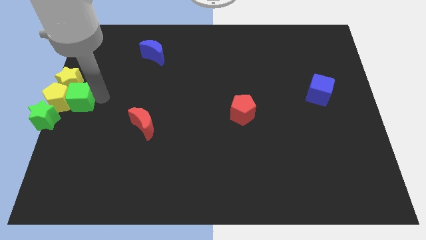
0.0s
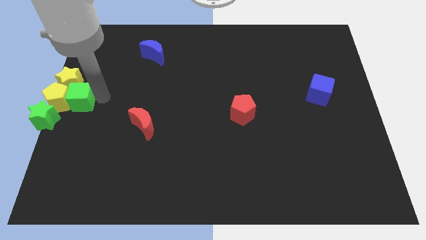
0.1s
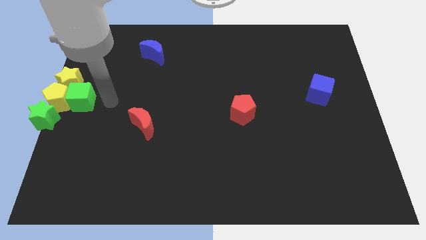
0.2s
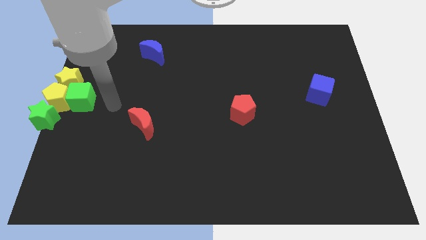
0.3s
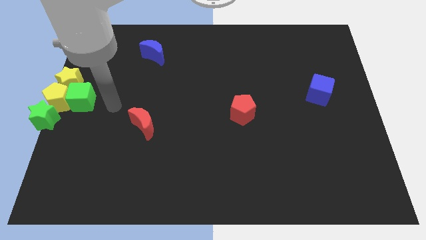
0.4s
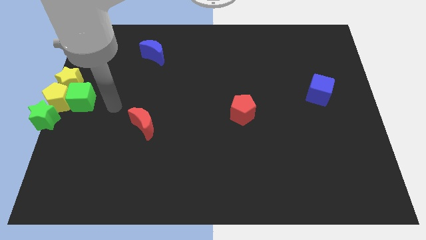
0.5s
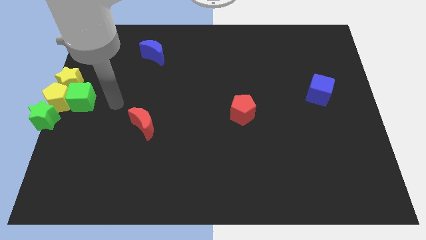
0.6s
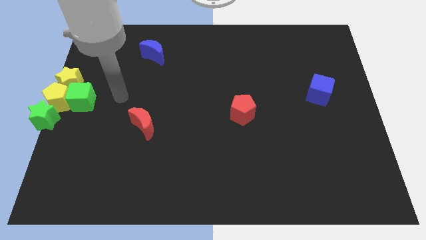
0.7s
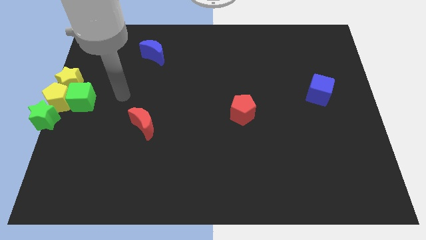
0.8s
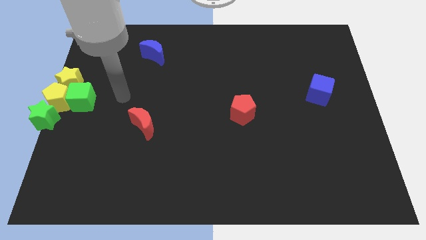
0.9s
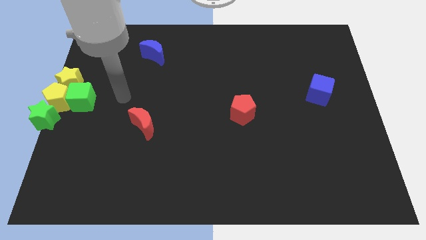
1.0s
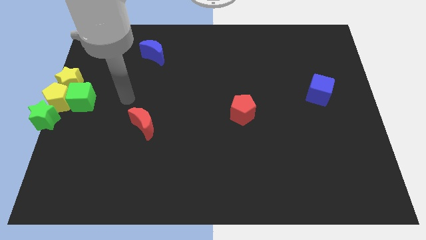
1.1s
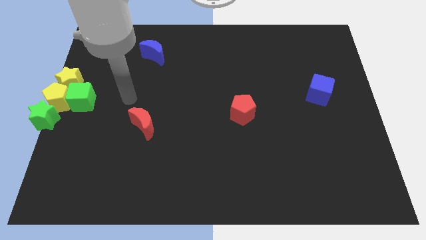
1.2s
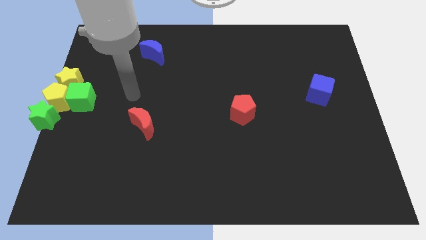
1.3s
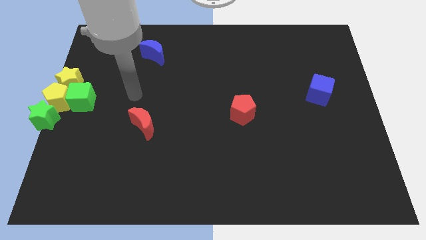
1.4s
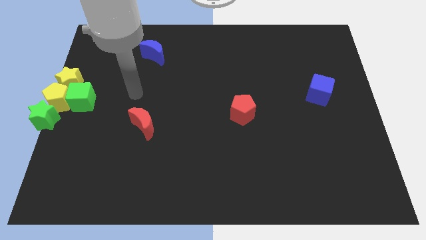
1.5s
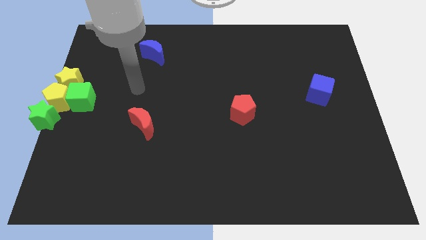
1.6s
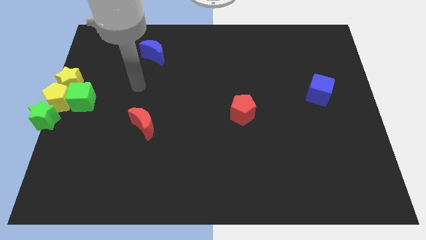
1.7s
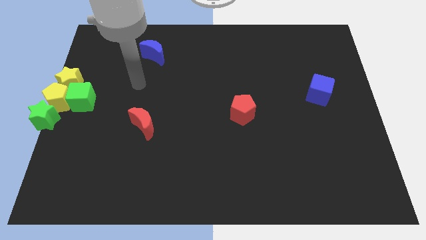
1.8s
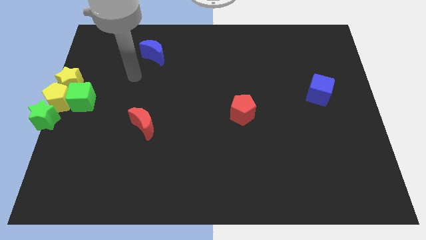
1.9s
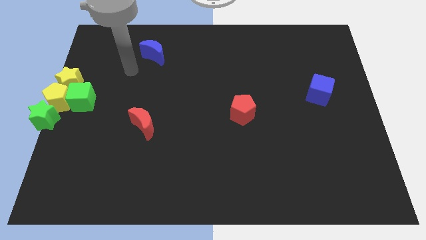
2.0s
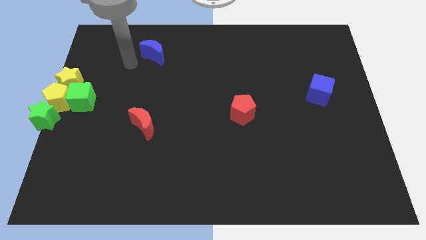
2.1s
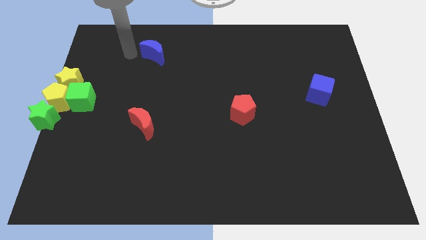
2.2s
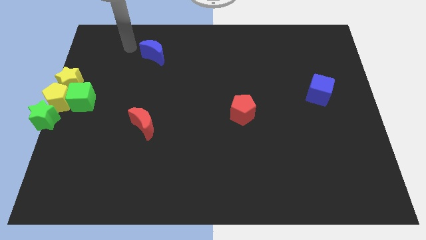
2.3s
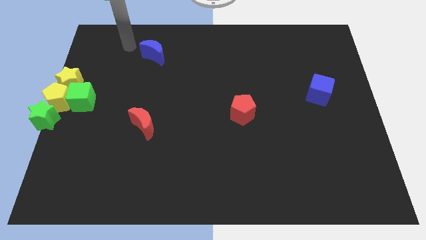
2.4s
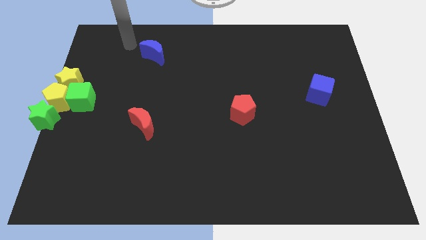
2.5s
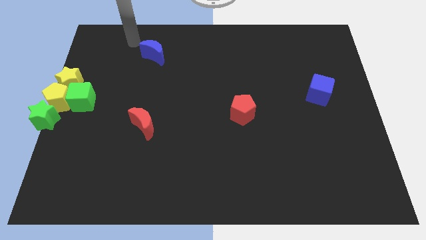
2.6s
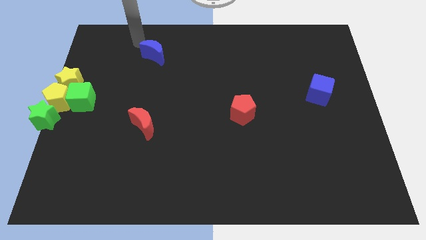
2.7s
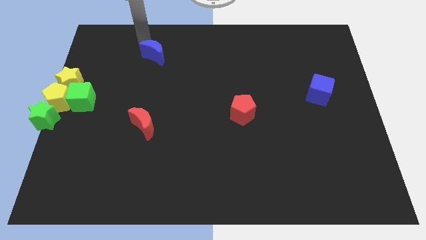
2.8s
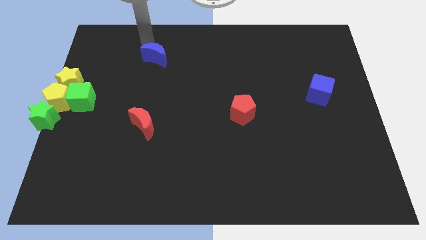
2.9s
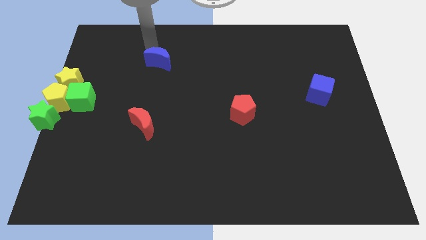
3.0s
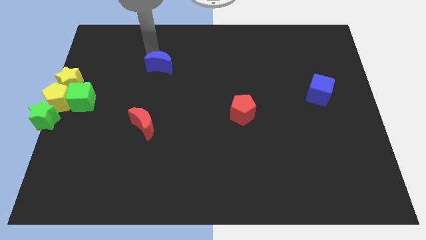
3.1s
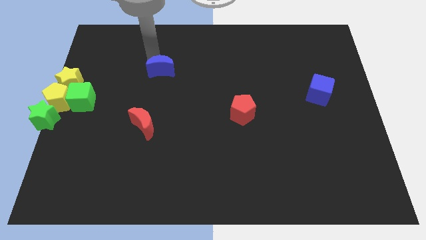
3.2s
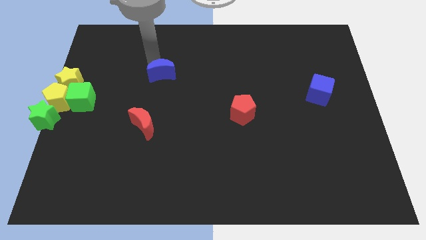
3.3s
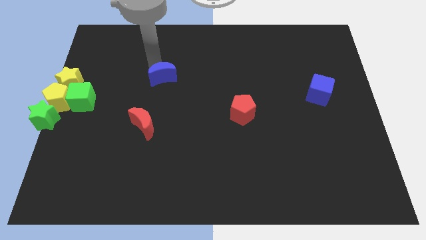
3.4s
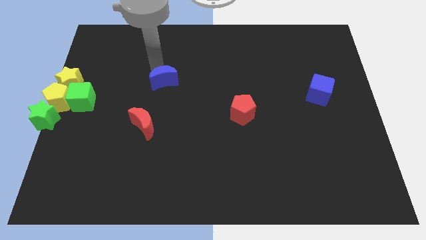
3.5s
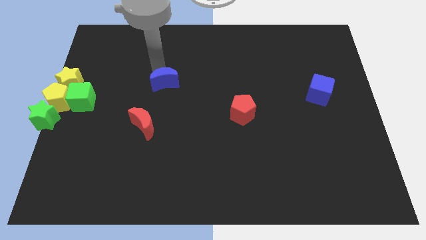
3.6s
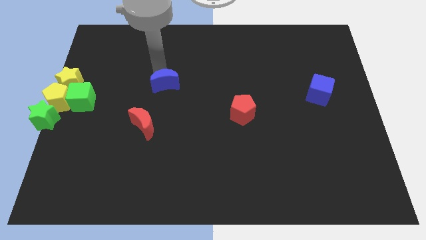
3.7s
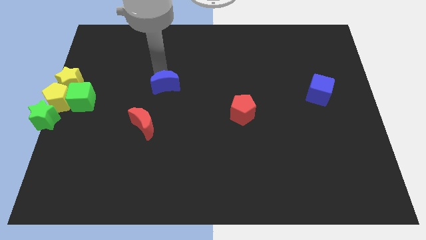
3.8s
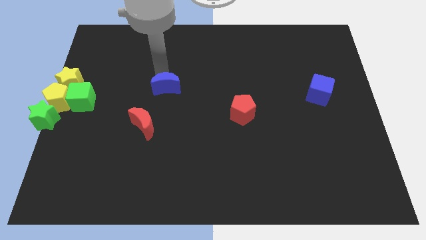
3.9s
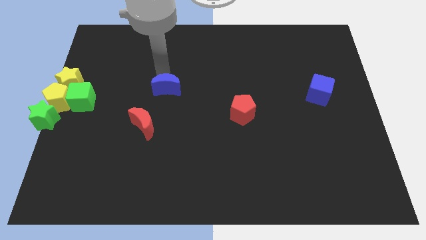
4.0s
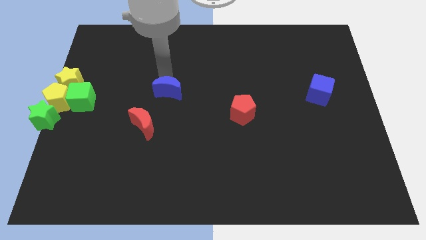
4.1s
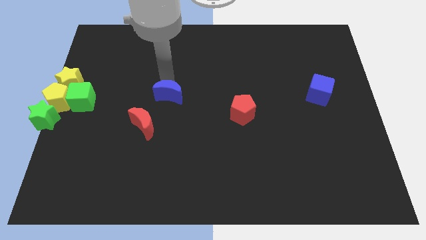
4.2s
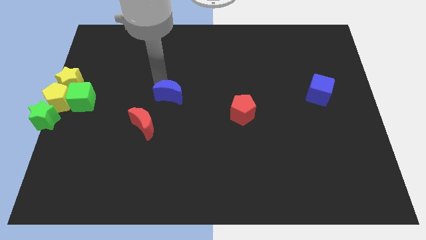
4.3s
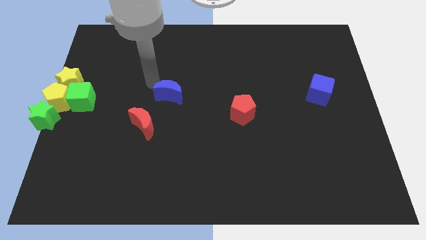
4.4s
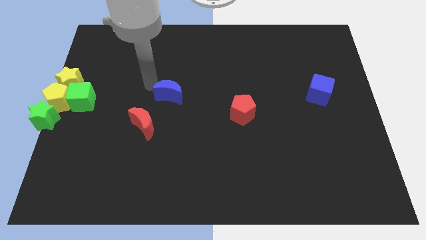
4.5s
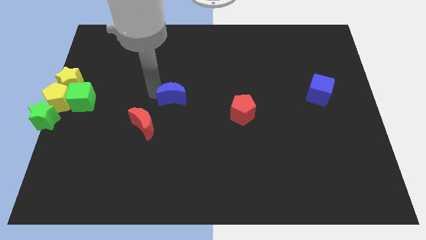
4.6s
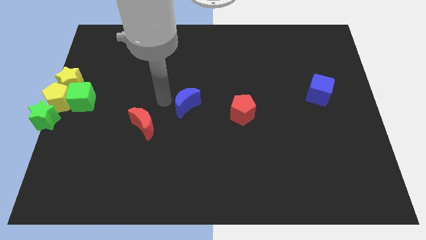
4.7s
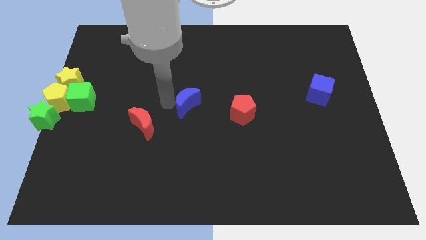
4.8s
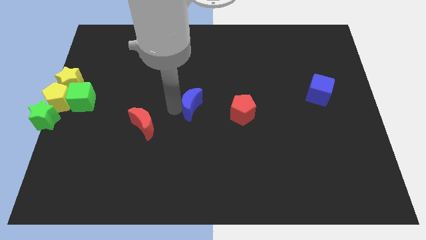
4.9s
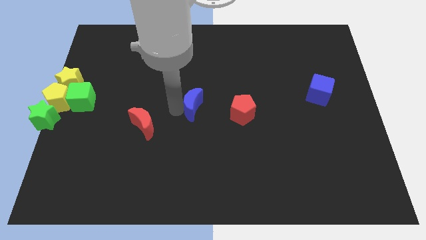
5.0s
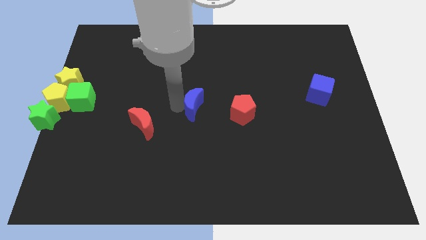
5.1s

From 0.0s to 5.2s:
push the blue crescent to the bottom

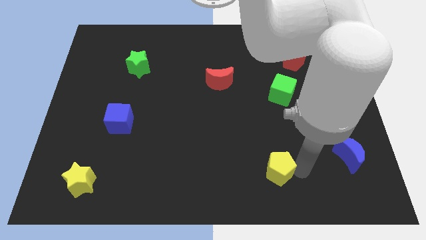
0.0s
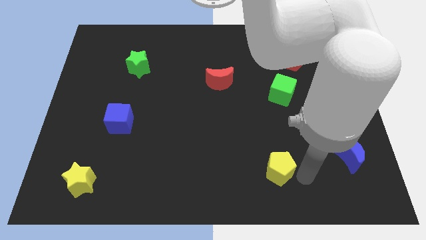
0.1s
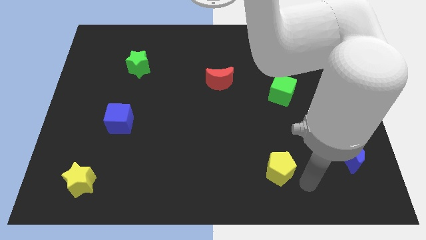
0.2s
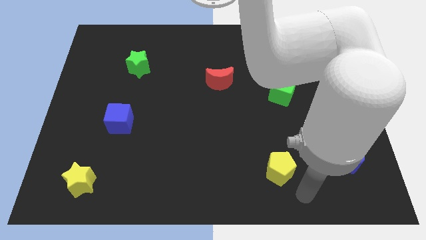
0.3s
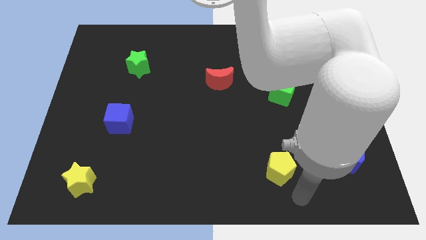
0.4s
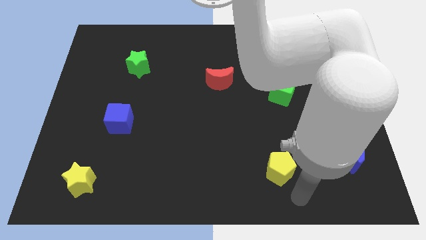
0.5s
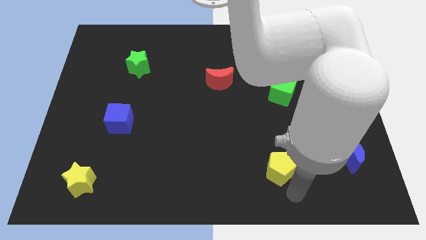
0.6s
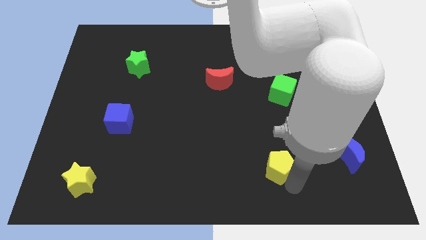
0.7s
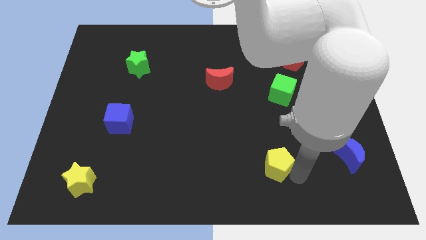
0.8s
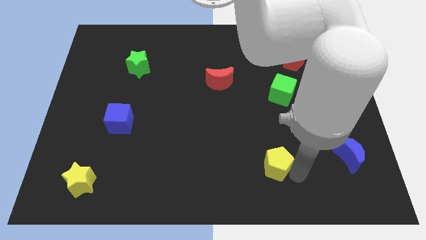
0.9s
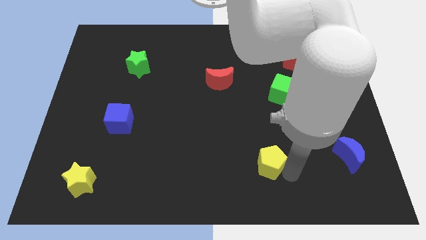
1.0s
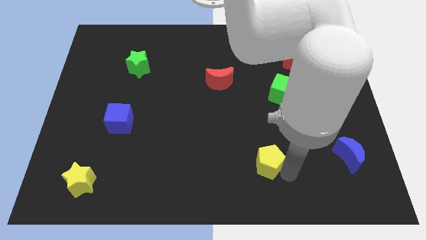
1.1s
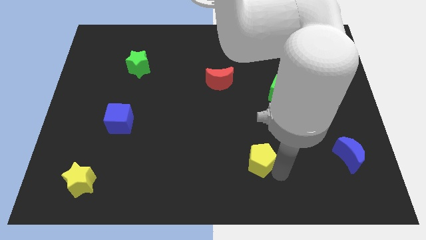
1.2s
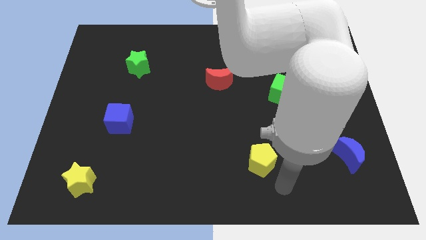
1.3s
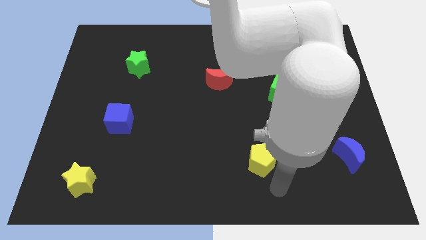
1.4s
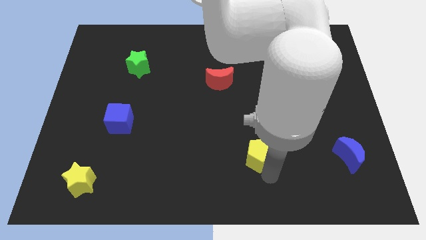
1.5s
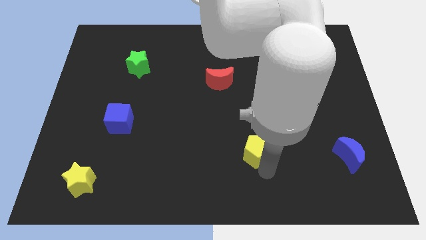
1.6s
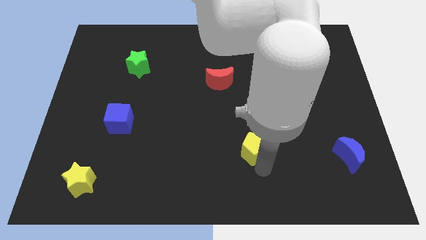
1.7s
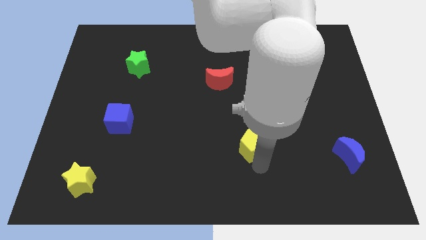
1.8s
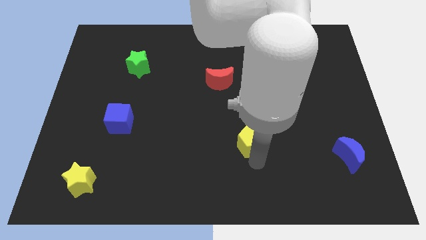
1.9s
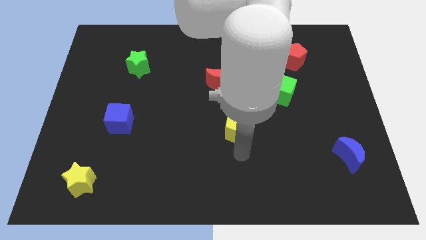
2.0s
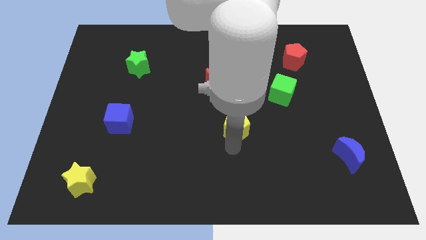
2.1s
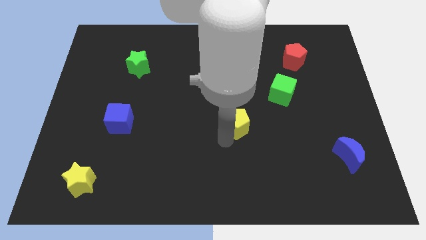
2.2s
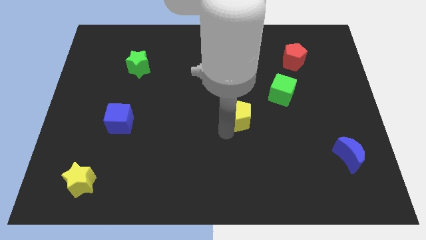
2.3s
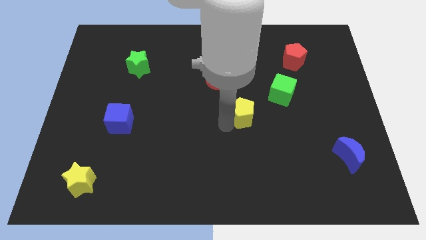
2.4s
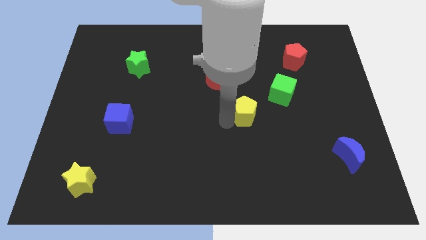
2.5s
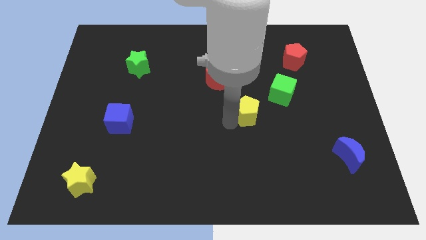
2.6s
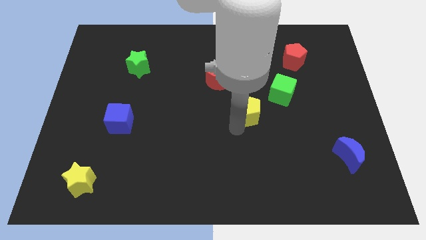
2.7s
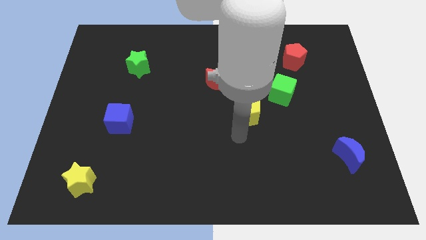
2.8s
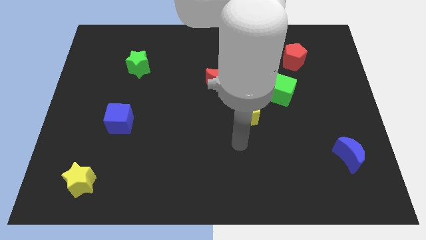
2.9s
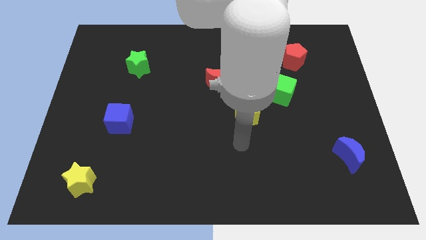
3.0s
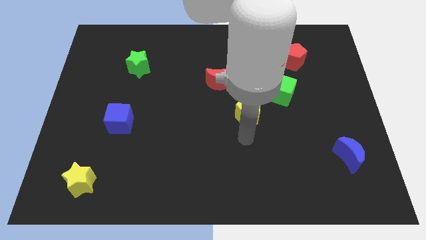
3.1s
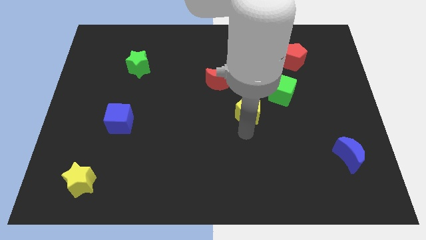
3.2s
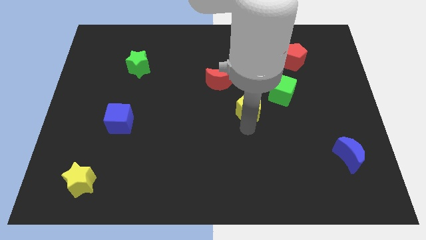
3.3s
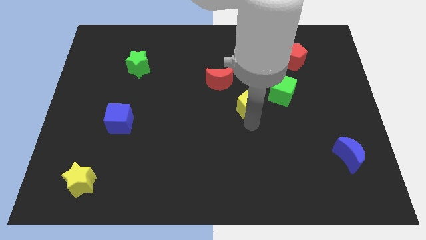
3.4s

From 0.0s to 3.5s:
place the yellow pentagon diagonally top right to the blue cube

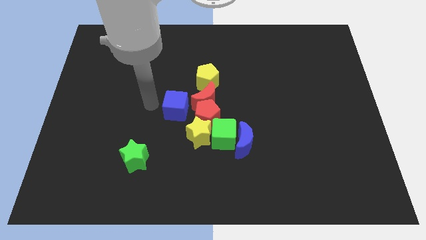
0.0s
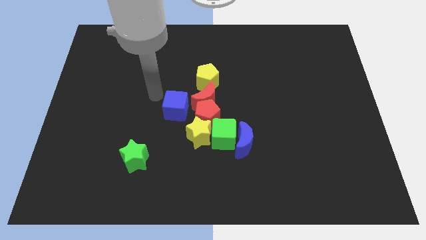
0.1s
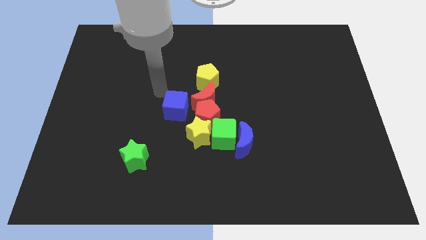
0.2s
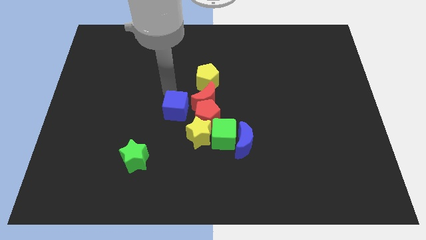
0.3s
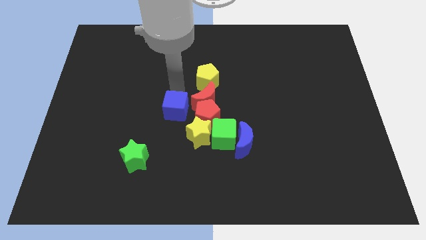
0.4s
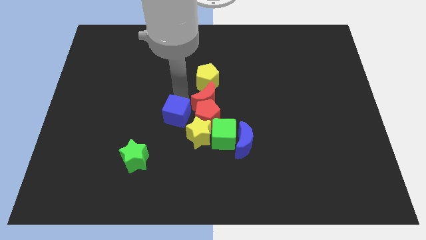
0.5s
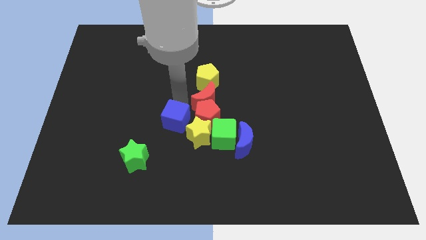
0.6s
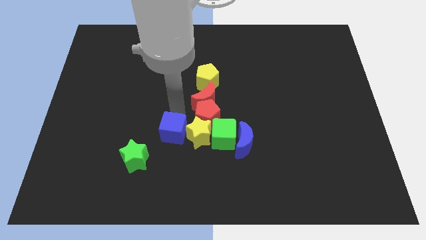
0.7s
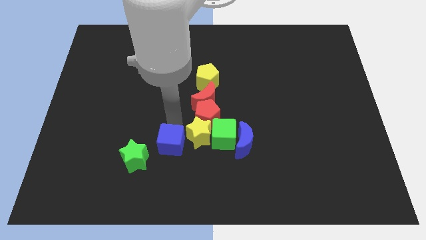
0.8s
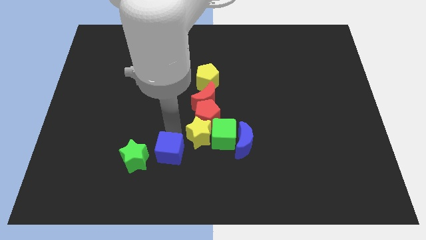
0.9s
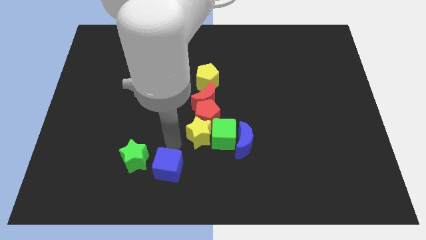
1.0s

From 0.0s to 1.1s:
slide blue cube to the right of green star
